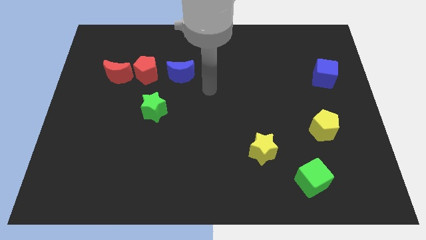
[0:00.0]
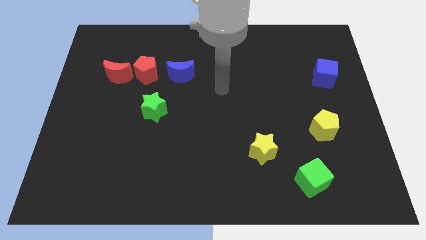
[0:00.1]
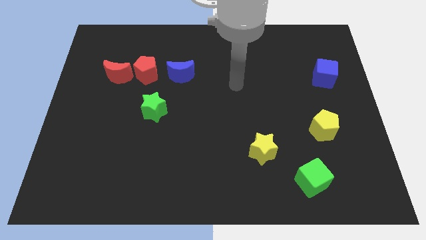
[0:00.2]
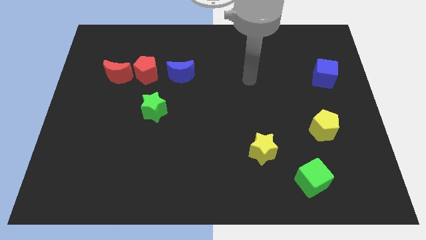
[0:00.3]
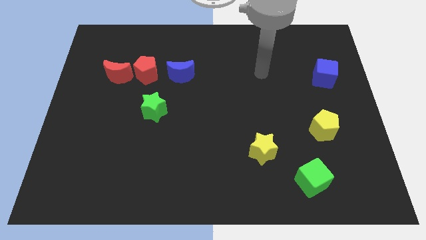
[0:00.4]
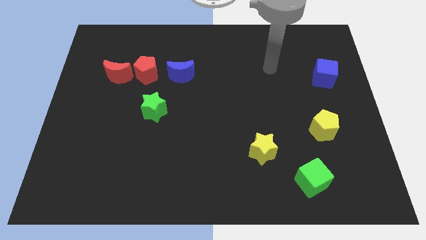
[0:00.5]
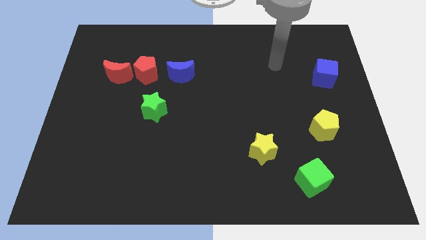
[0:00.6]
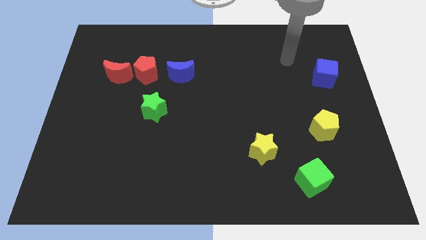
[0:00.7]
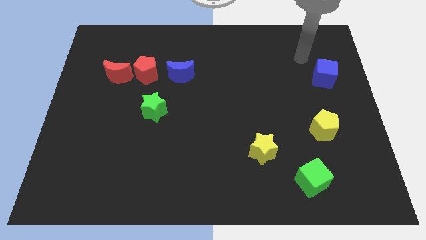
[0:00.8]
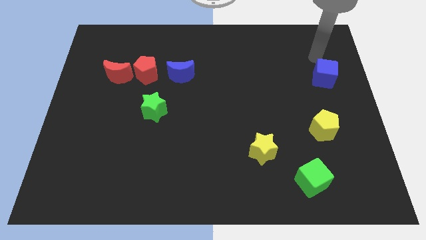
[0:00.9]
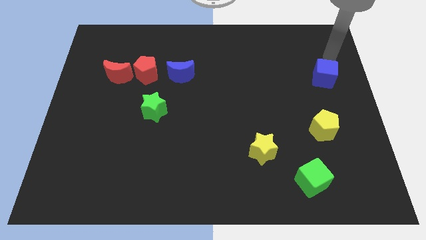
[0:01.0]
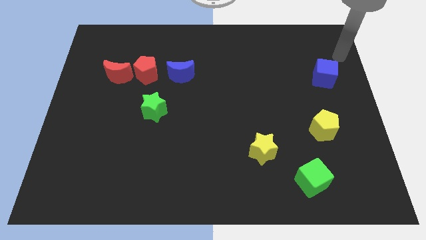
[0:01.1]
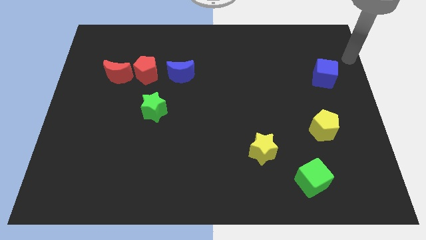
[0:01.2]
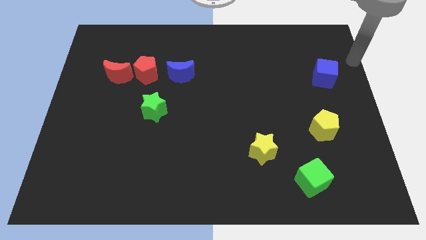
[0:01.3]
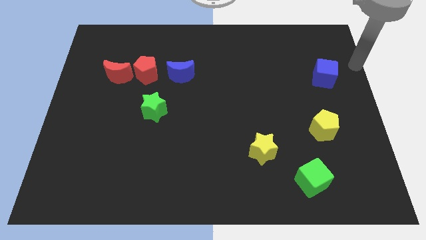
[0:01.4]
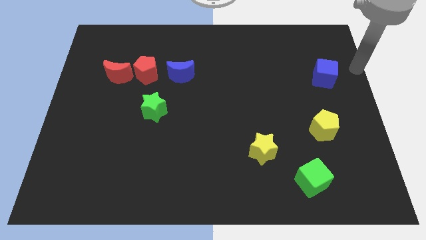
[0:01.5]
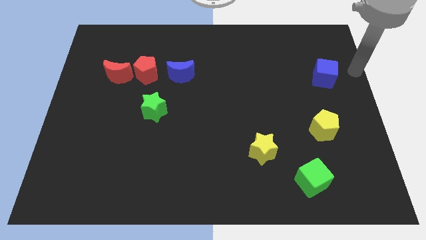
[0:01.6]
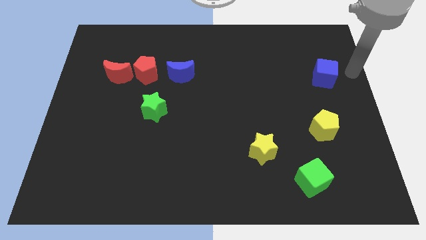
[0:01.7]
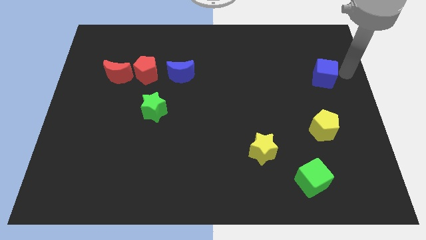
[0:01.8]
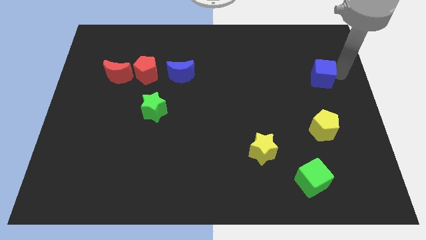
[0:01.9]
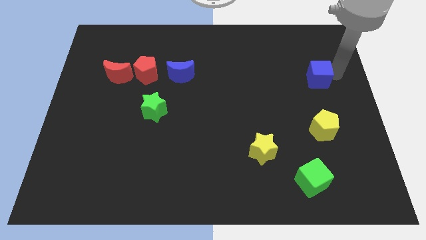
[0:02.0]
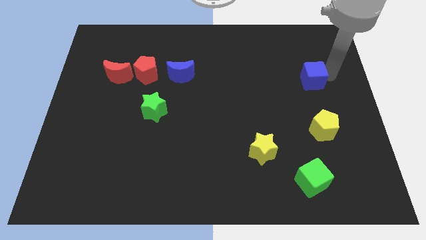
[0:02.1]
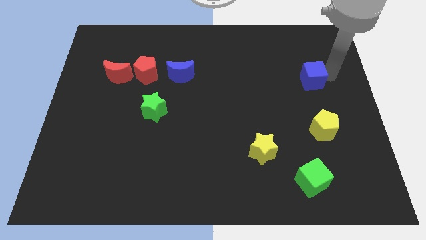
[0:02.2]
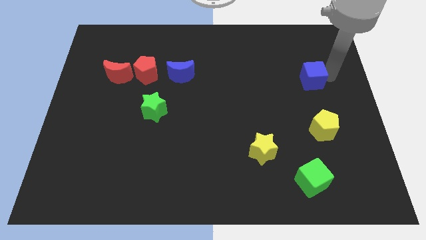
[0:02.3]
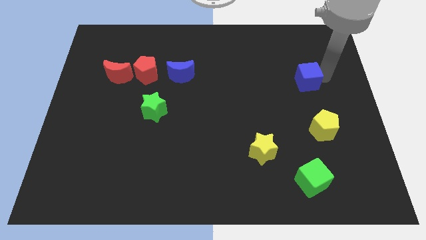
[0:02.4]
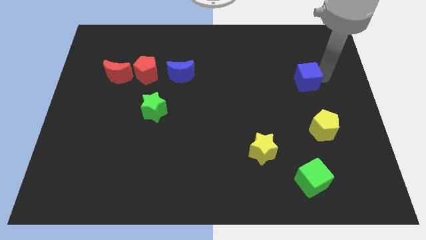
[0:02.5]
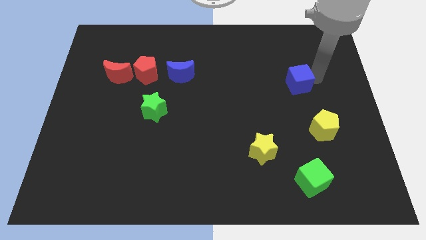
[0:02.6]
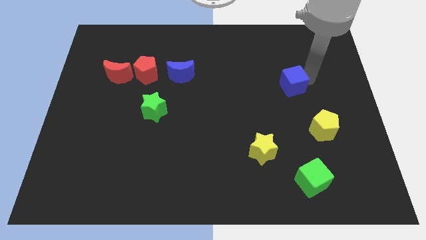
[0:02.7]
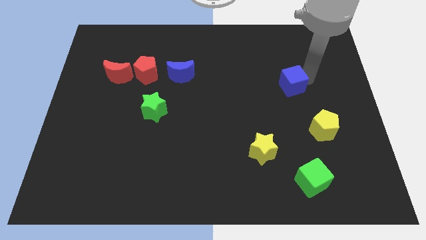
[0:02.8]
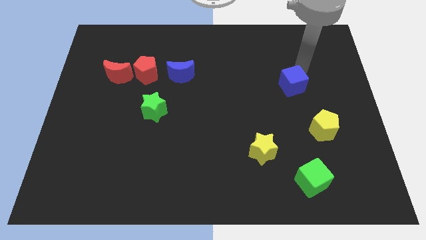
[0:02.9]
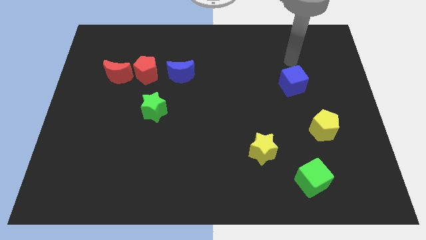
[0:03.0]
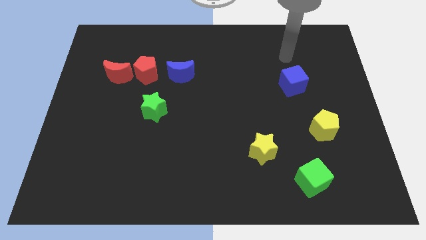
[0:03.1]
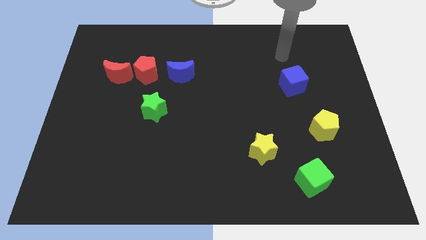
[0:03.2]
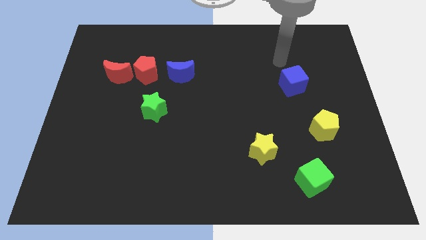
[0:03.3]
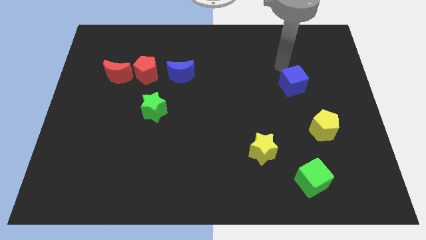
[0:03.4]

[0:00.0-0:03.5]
drag the blue cube towards left side of the board

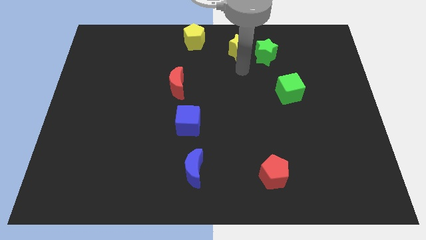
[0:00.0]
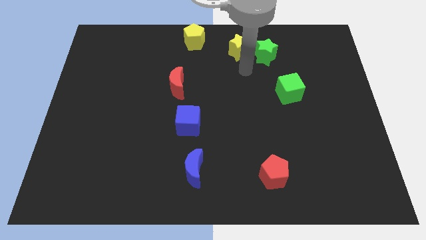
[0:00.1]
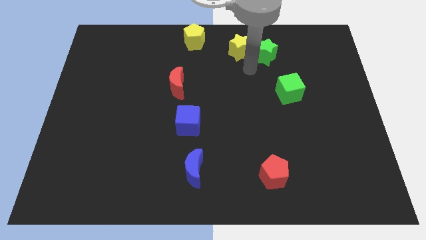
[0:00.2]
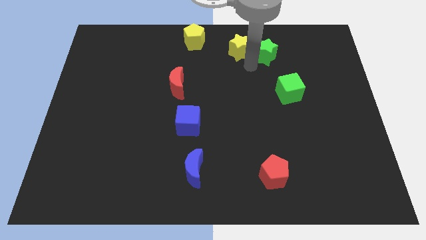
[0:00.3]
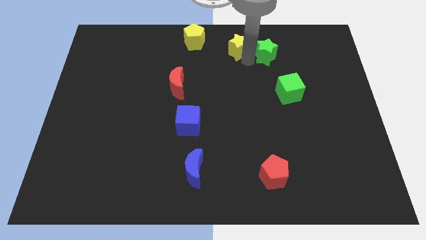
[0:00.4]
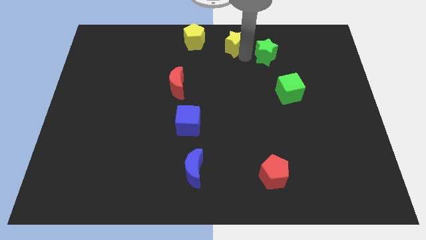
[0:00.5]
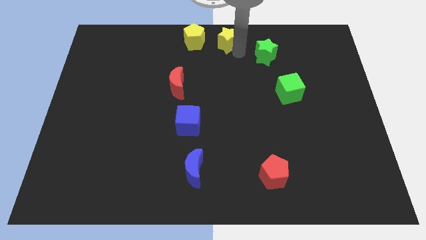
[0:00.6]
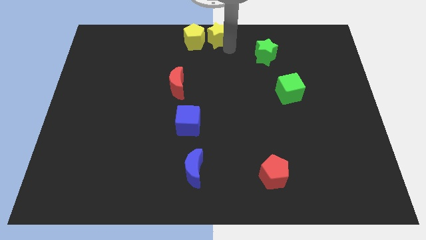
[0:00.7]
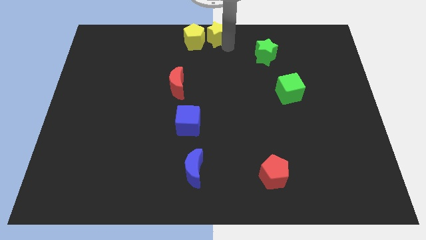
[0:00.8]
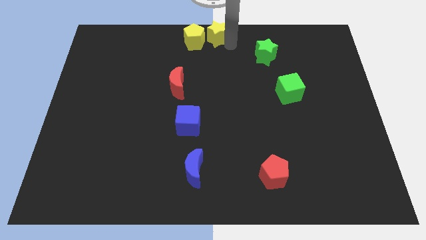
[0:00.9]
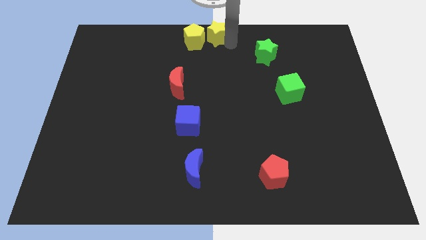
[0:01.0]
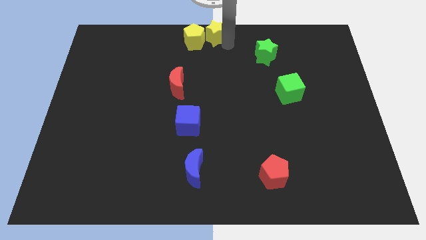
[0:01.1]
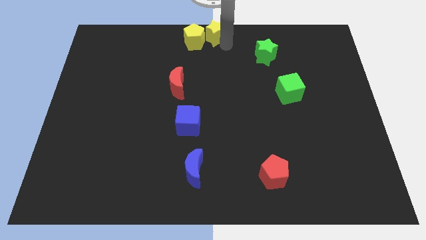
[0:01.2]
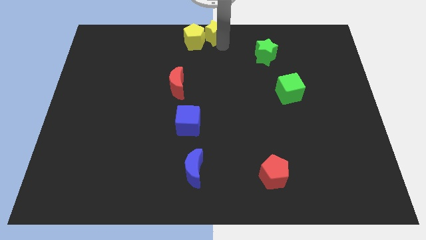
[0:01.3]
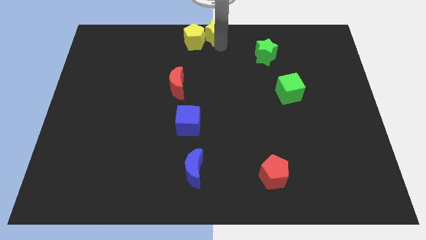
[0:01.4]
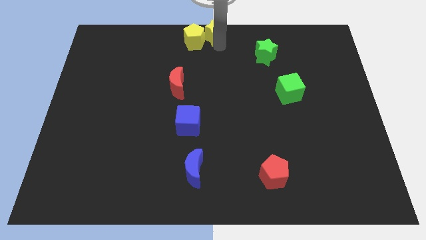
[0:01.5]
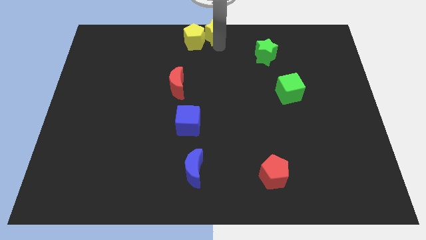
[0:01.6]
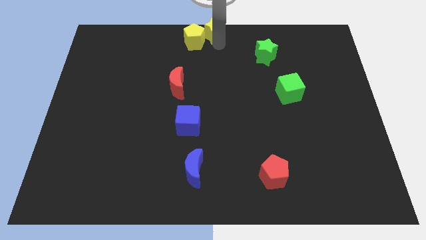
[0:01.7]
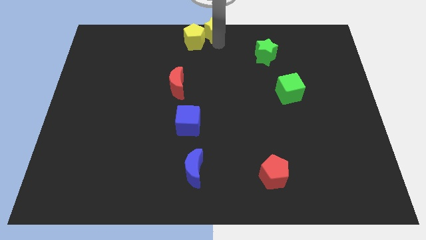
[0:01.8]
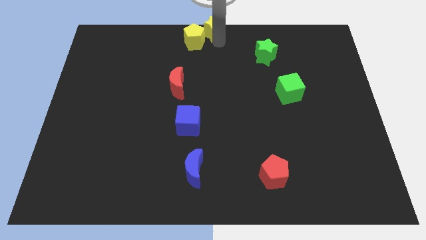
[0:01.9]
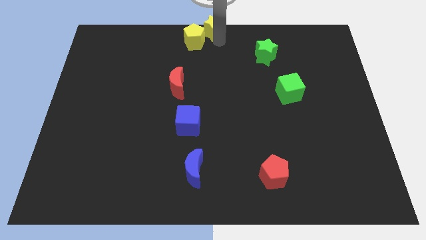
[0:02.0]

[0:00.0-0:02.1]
move the yellow star into the yellow pentagon

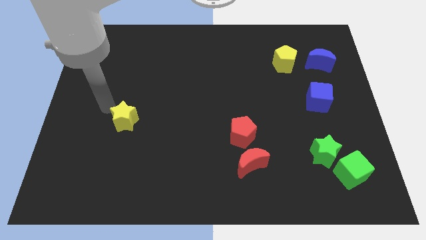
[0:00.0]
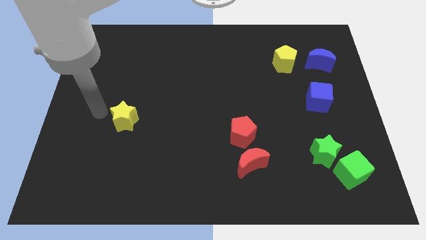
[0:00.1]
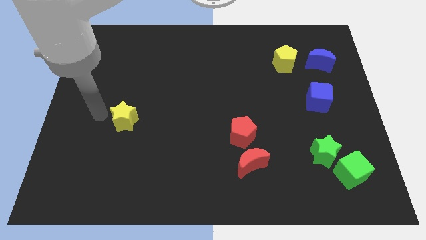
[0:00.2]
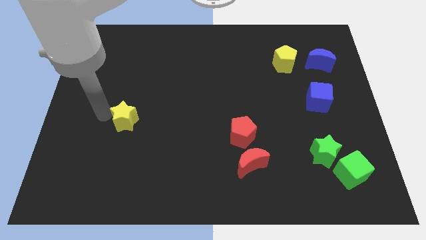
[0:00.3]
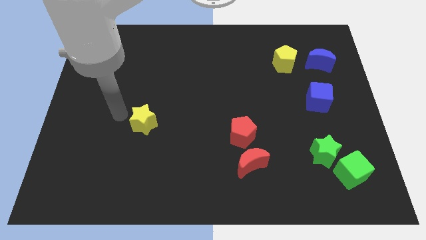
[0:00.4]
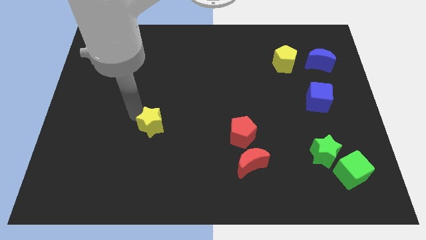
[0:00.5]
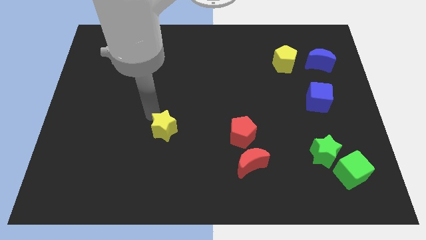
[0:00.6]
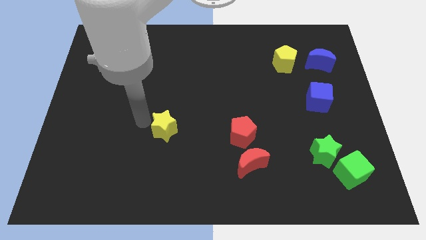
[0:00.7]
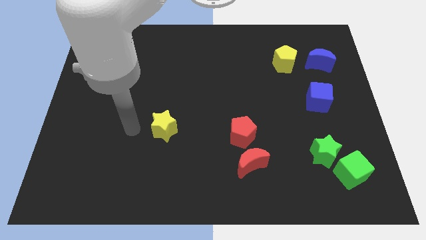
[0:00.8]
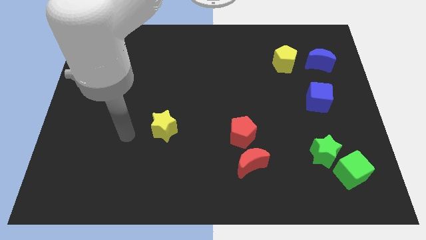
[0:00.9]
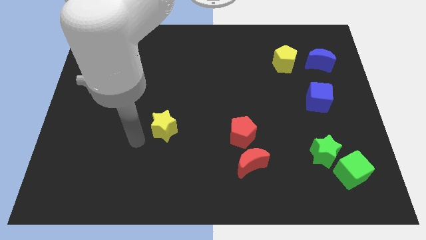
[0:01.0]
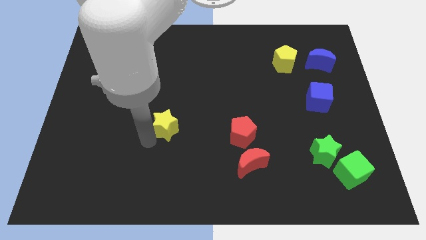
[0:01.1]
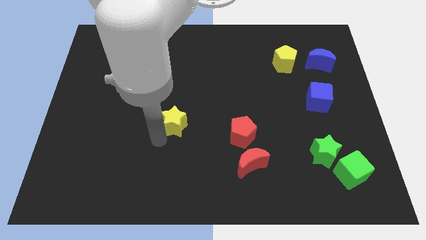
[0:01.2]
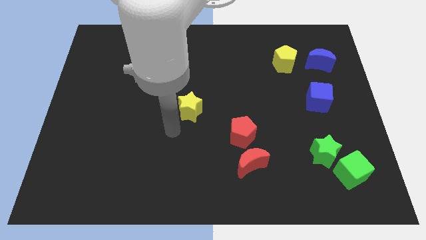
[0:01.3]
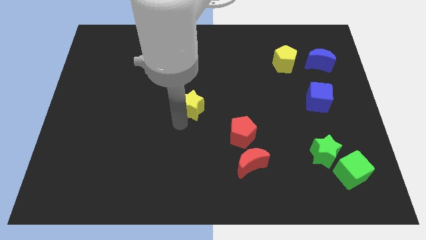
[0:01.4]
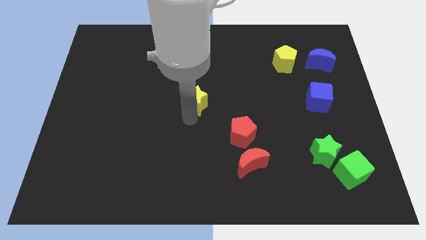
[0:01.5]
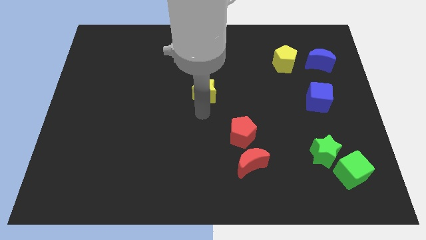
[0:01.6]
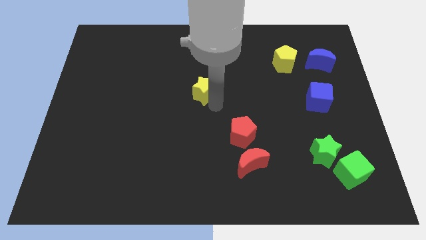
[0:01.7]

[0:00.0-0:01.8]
push the yellow star to the center of the board

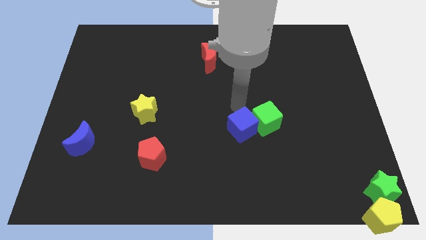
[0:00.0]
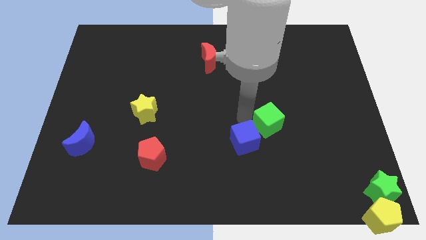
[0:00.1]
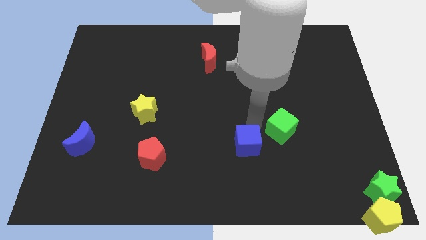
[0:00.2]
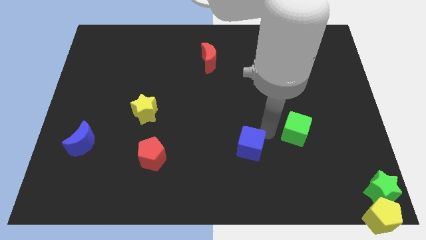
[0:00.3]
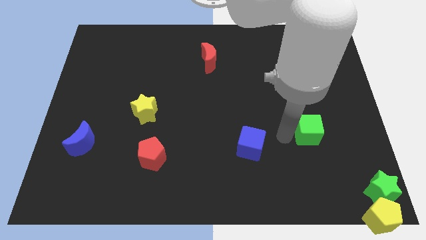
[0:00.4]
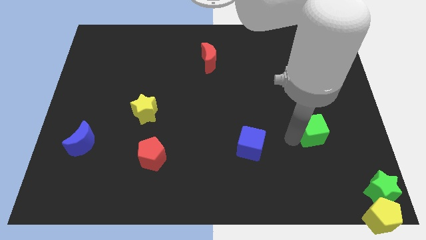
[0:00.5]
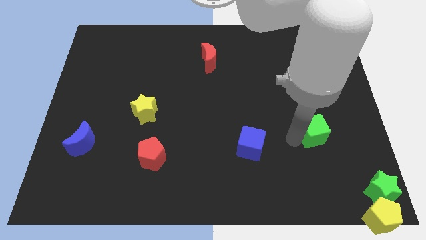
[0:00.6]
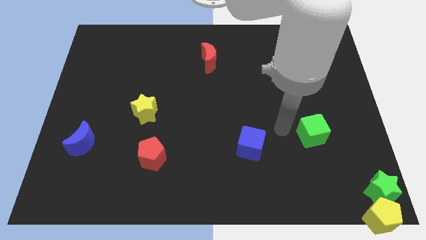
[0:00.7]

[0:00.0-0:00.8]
separate the green cube and the blue cube

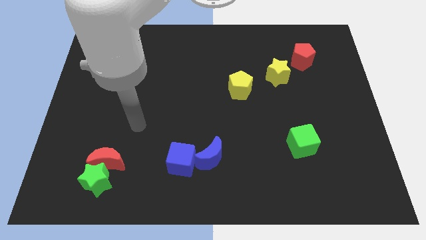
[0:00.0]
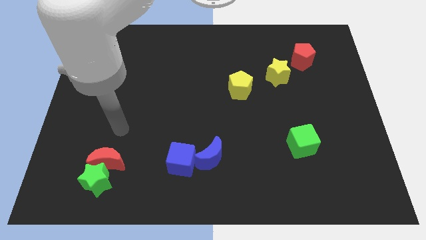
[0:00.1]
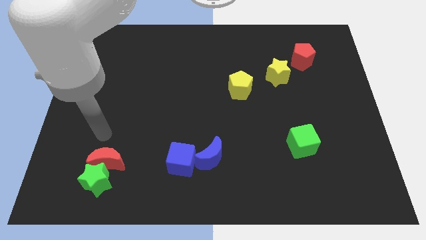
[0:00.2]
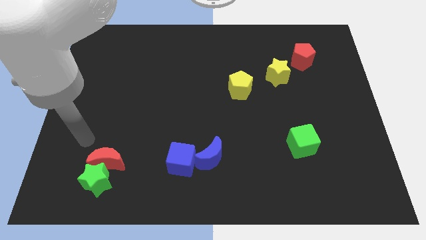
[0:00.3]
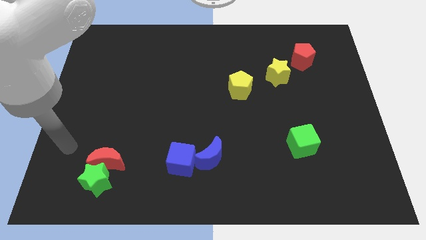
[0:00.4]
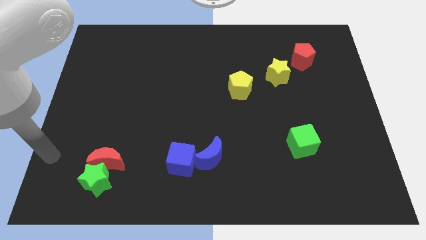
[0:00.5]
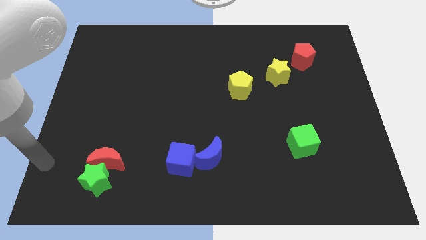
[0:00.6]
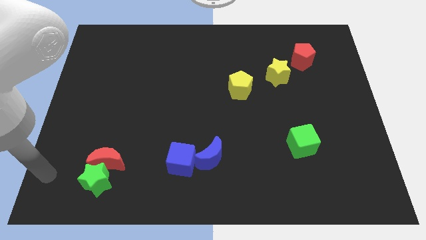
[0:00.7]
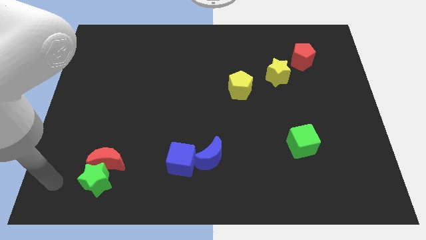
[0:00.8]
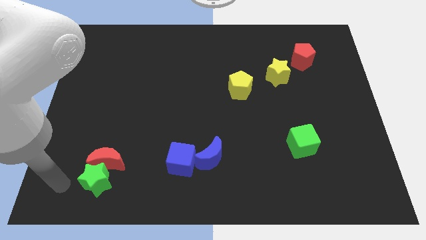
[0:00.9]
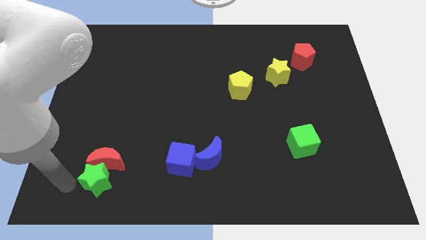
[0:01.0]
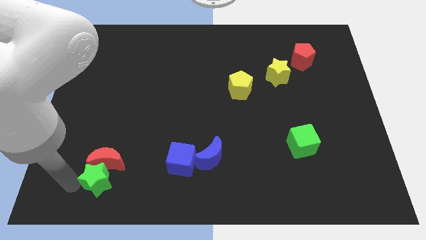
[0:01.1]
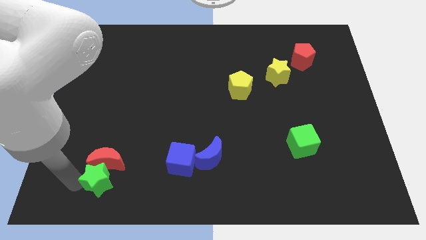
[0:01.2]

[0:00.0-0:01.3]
move the arm left of the green star
